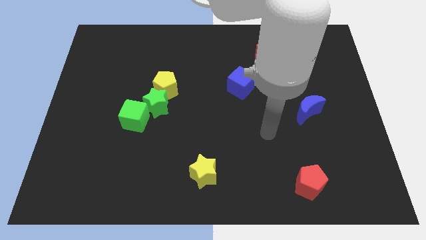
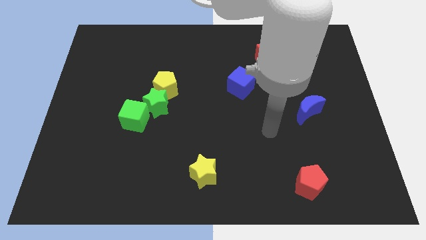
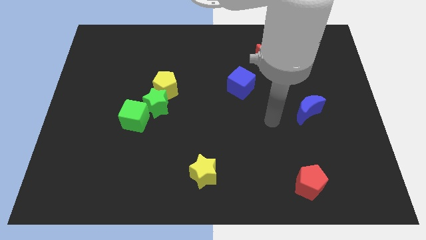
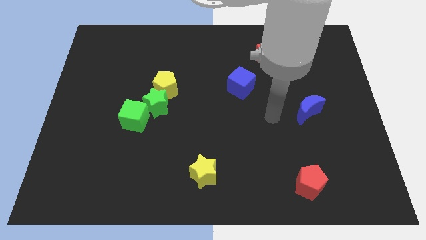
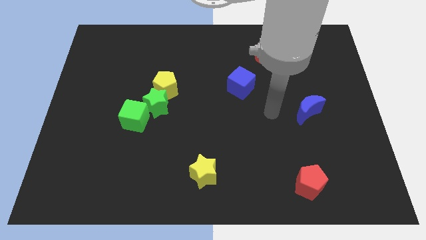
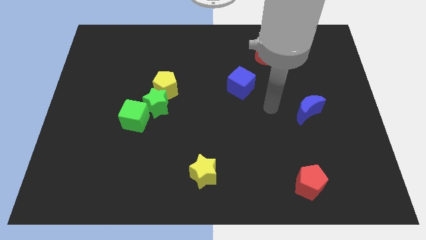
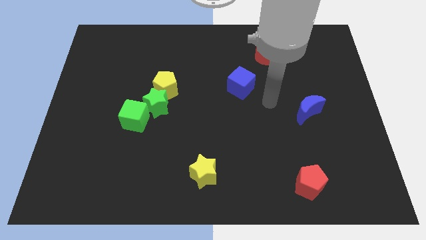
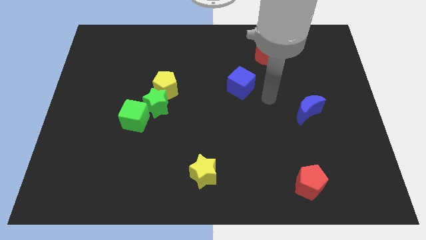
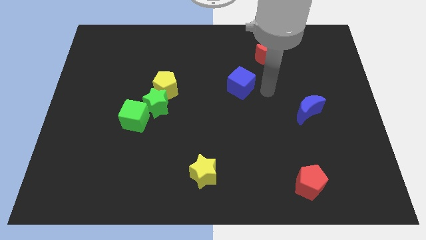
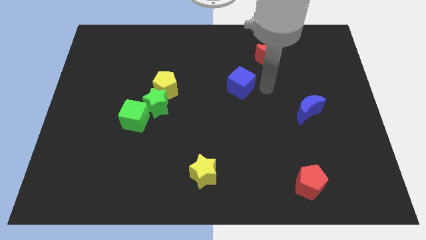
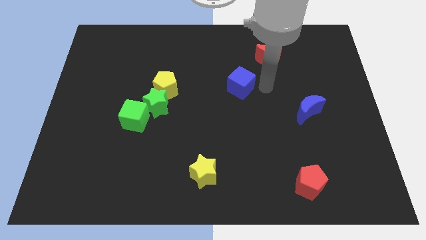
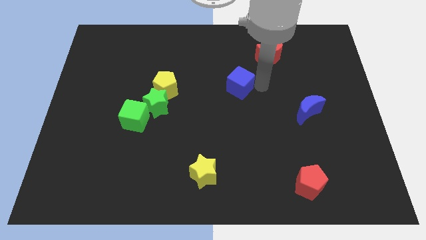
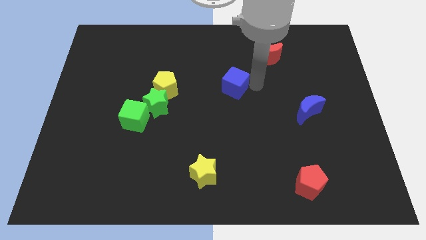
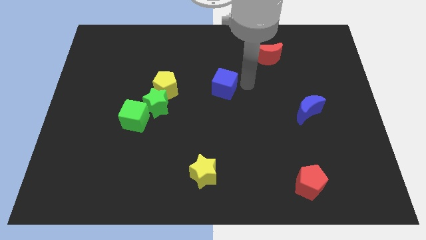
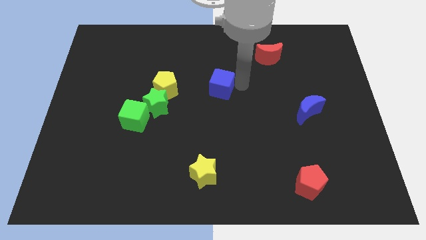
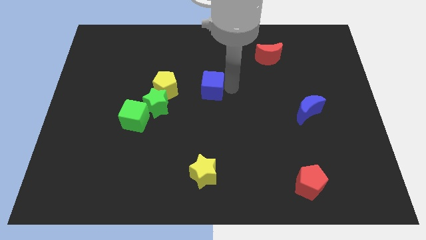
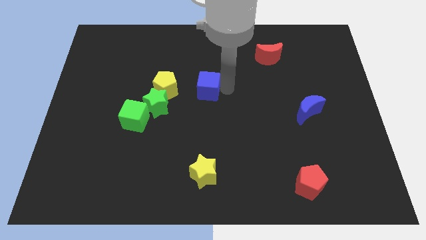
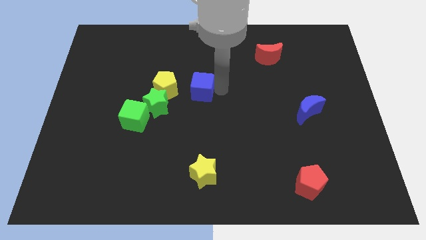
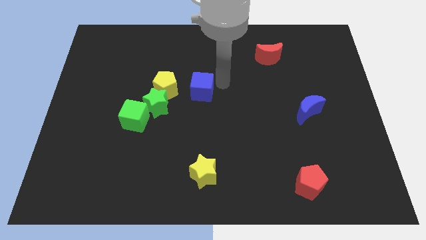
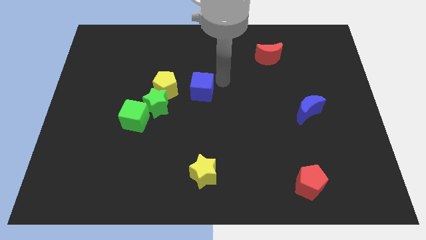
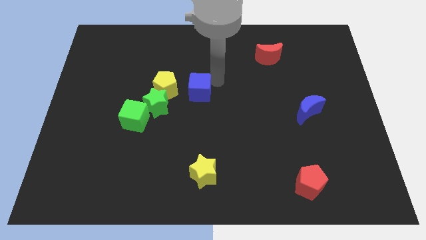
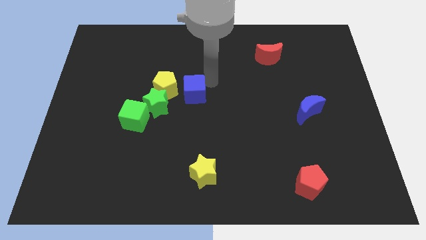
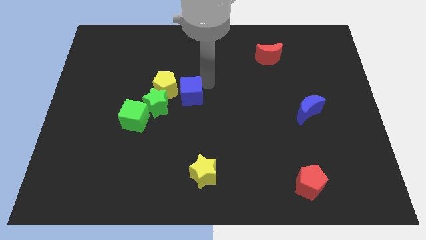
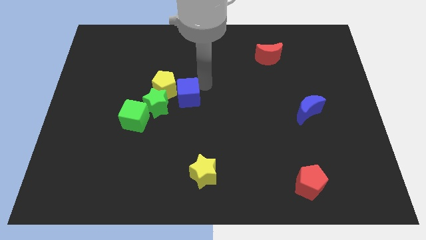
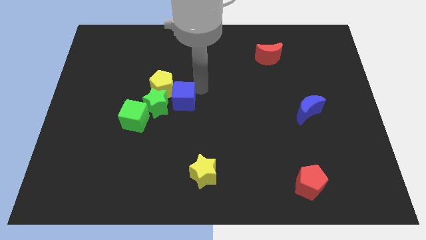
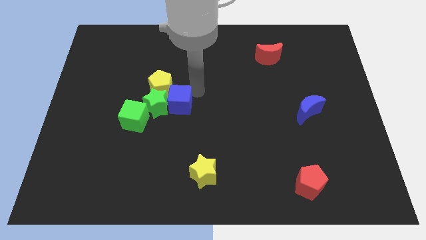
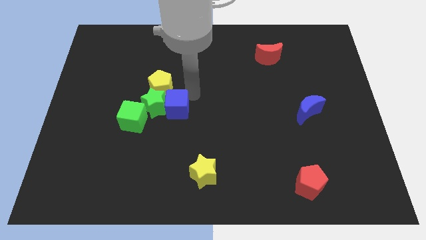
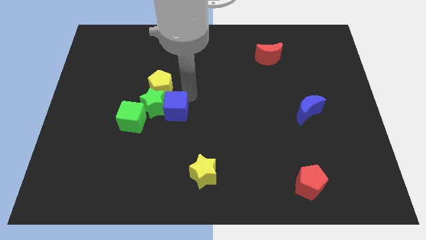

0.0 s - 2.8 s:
put the blue cube to the green star

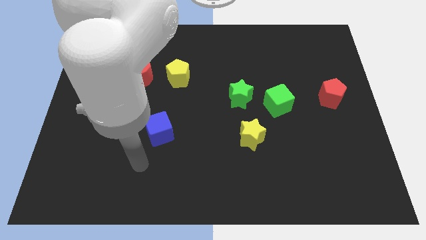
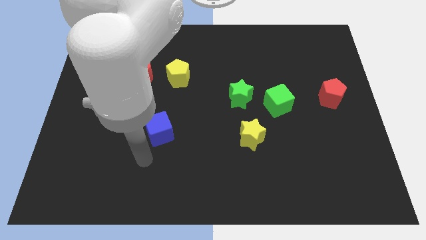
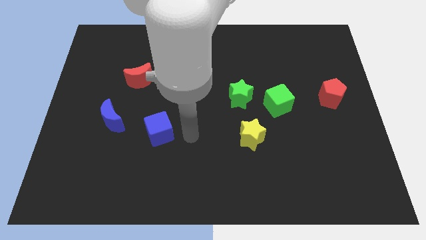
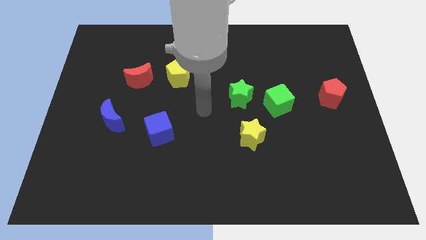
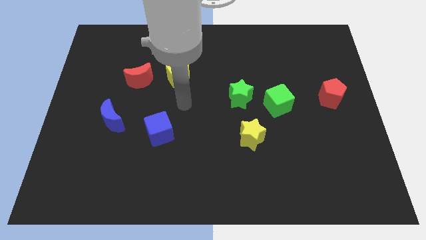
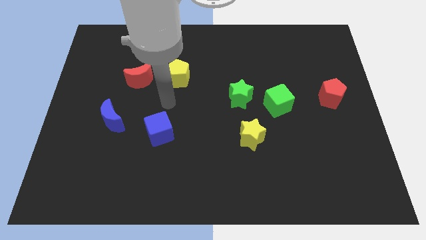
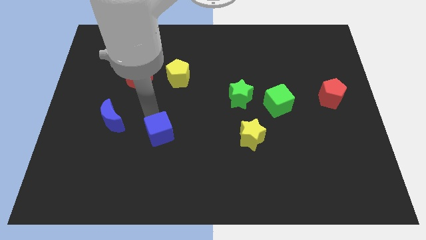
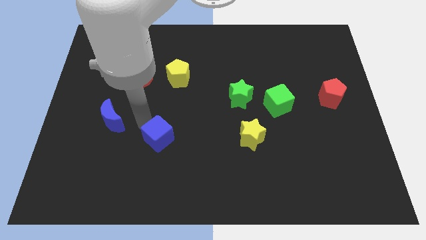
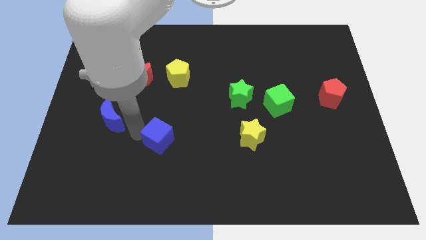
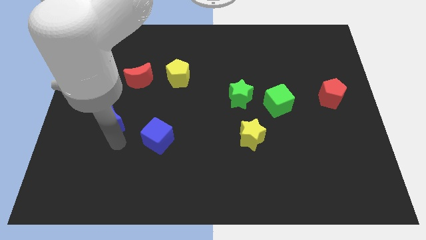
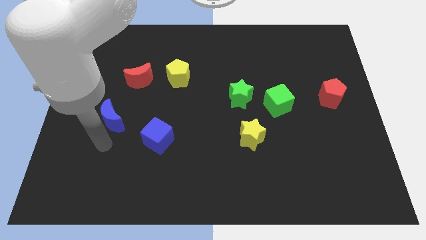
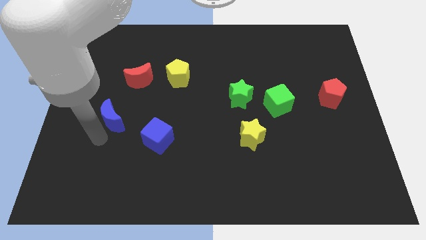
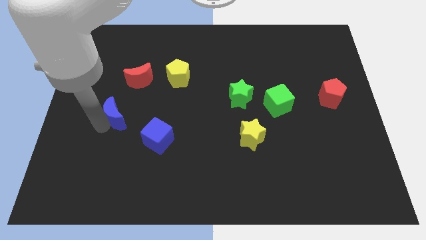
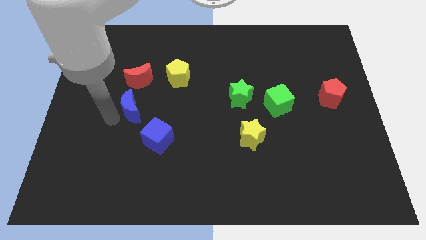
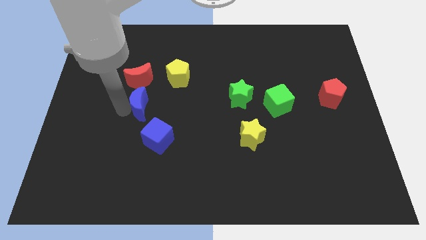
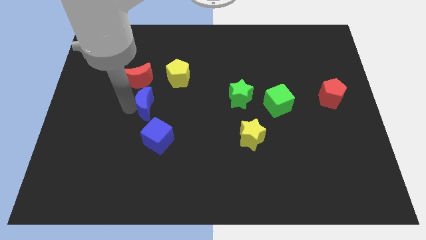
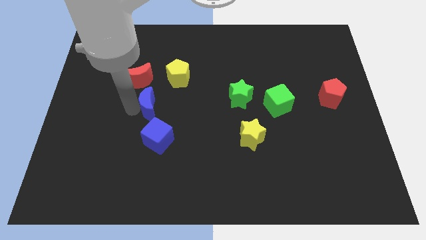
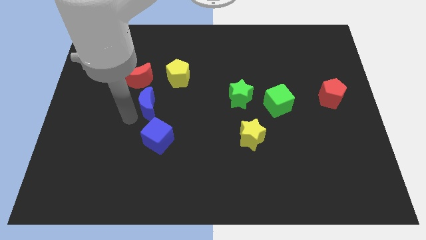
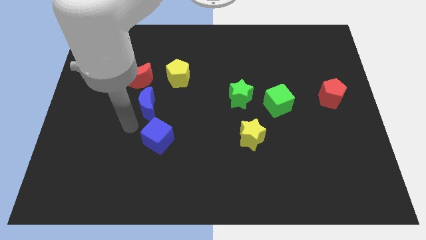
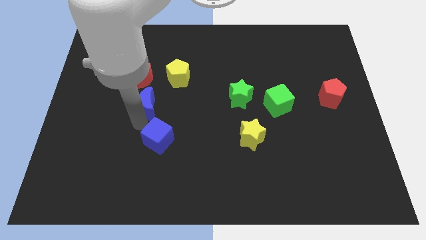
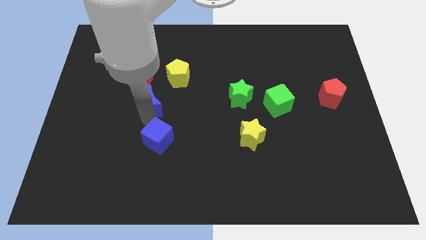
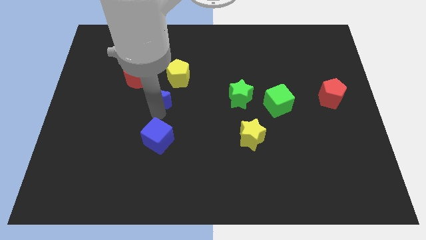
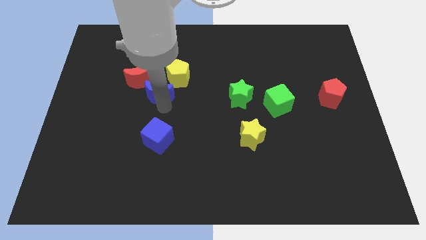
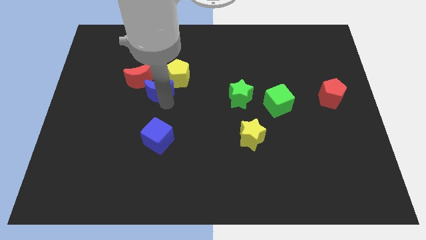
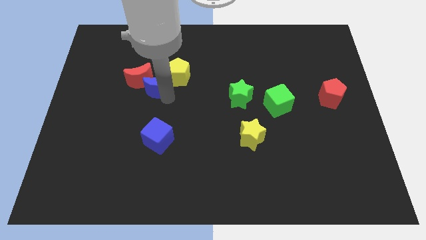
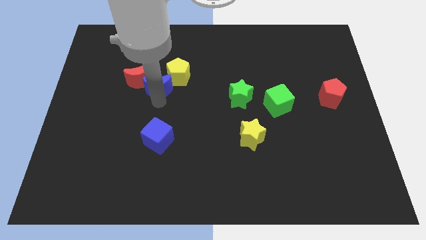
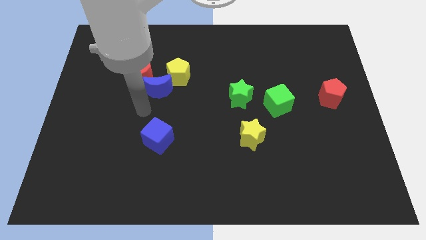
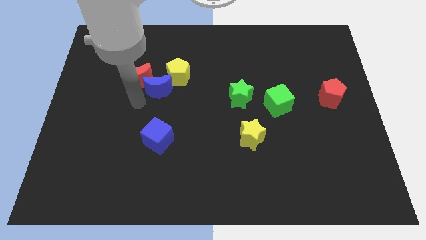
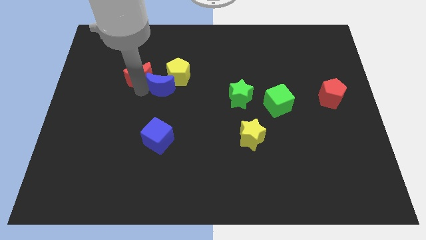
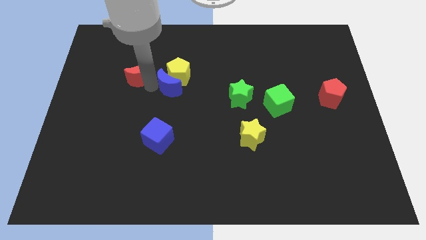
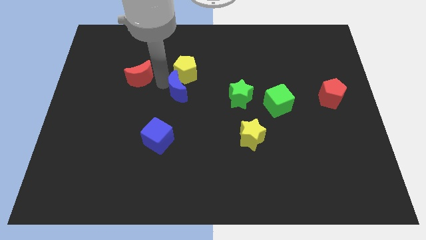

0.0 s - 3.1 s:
slide the blue moon to the yellow pentagon

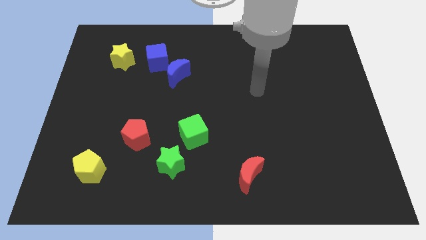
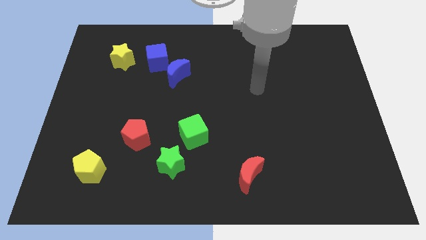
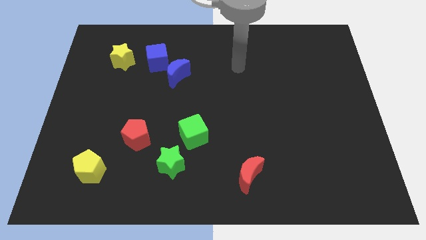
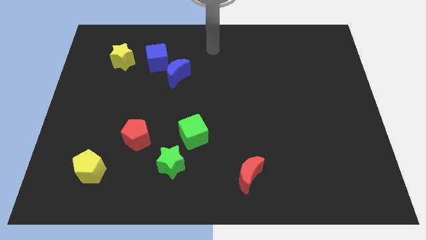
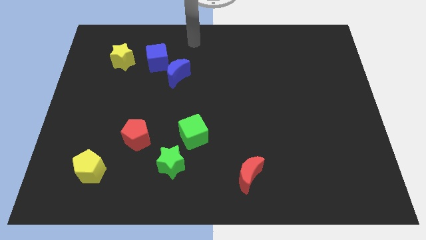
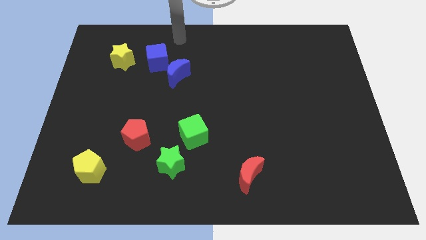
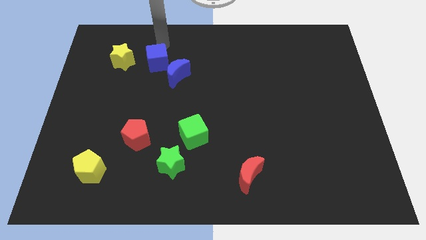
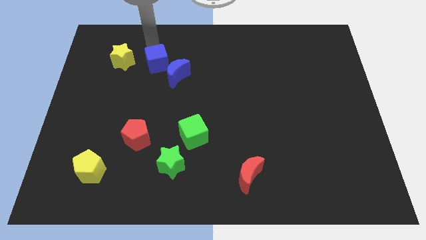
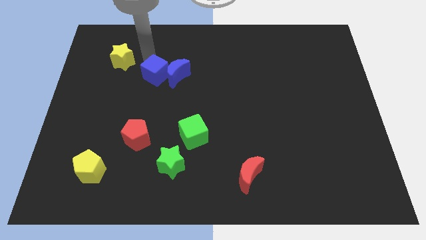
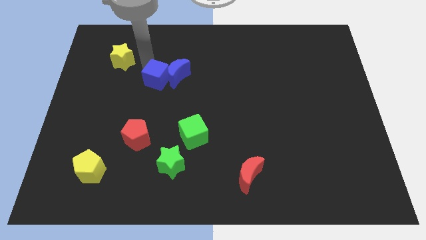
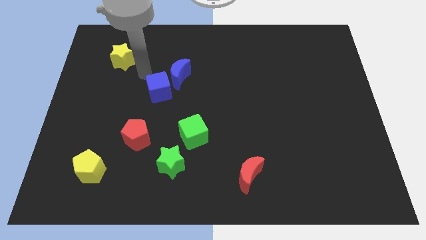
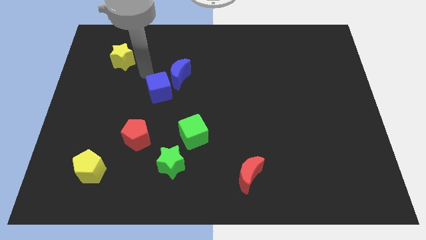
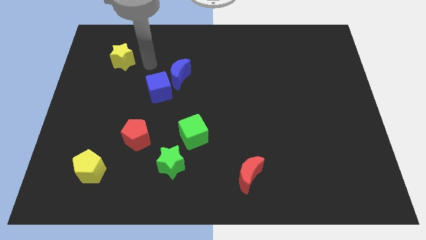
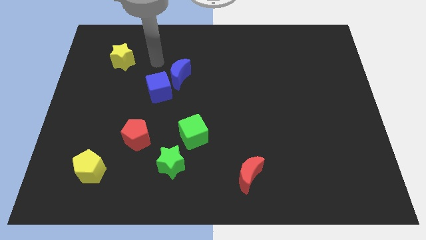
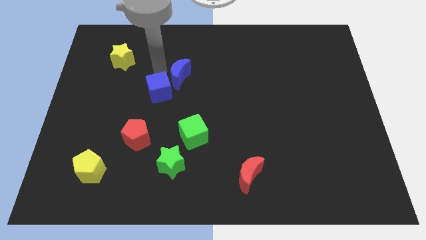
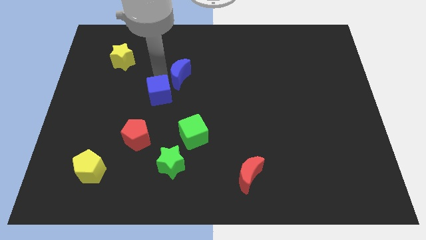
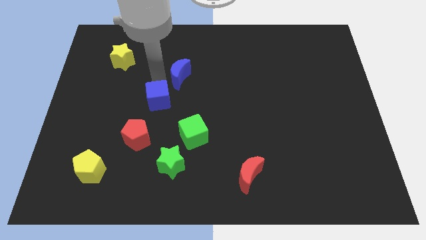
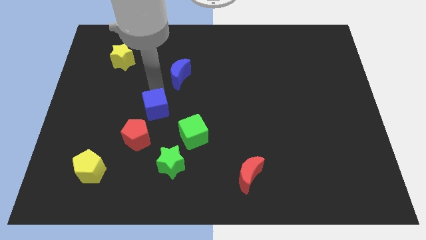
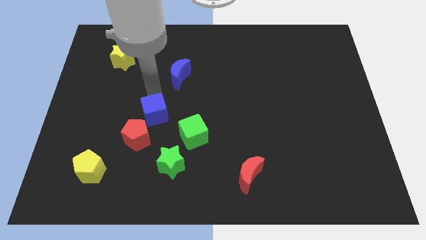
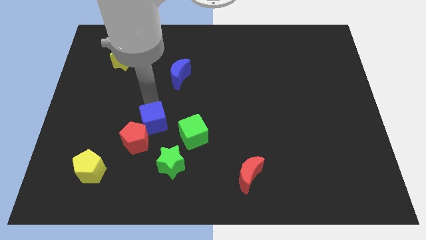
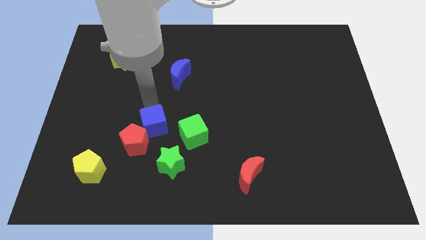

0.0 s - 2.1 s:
slide the blue cube to the red pentagon

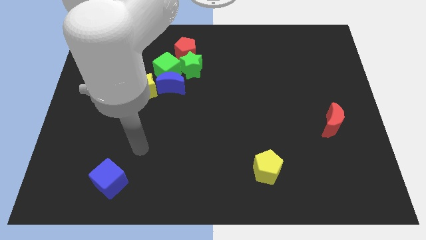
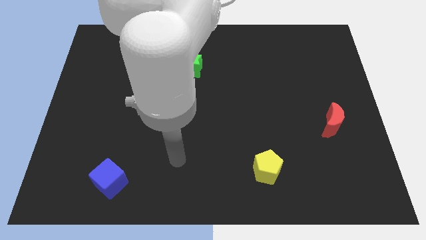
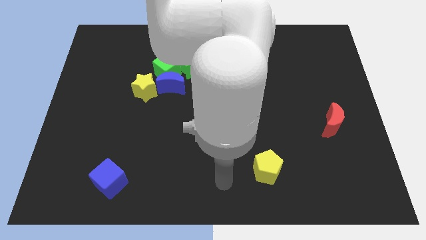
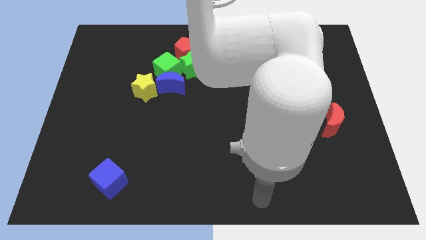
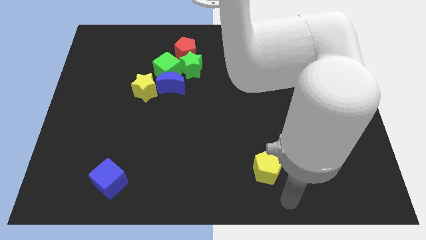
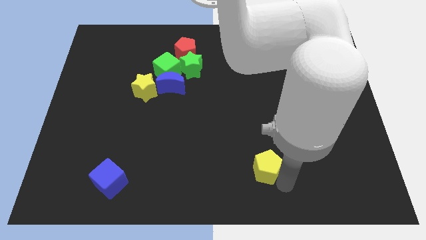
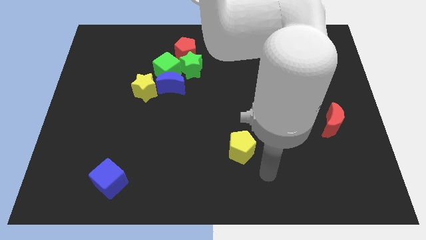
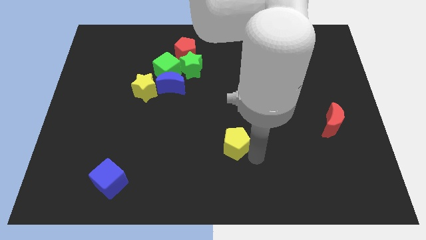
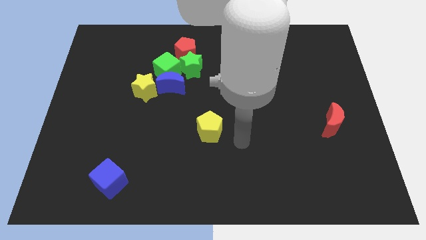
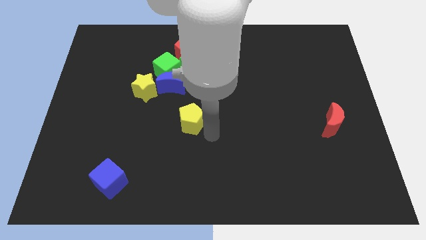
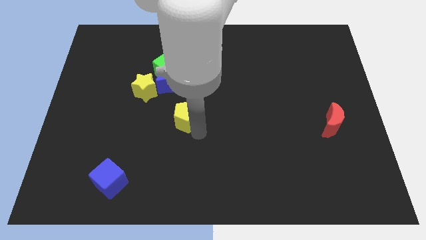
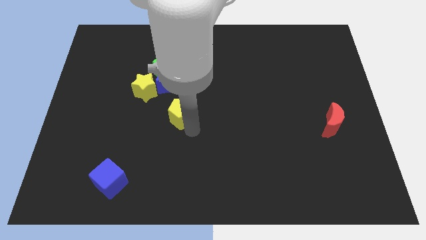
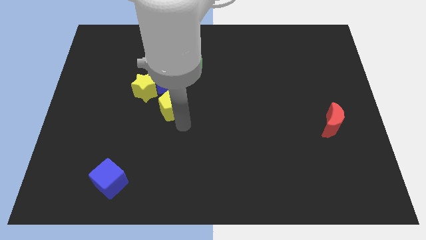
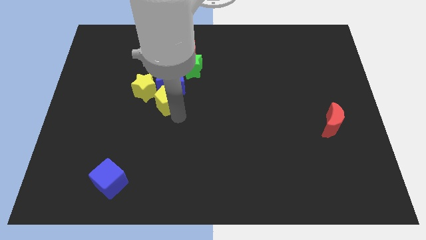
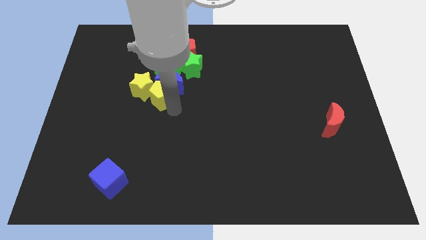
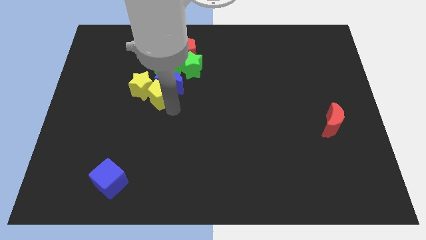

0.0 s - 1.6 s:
put the yellow pentagon towards the blue moon
